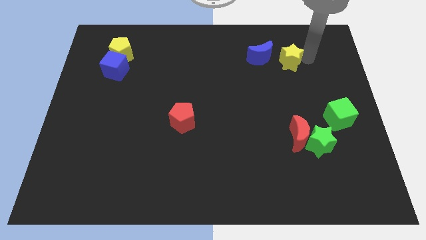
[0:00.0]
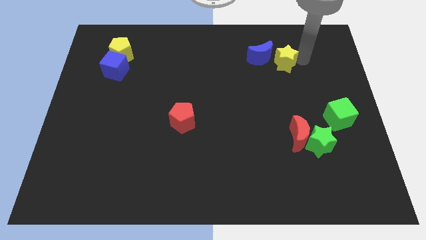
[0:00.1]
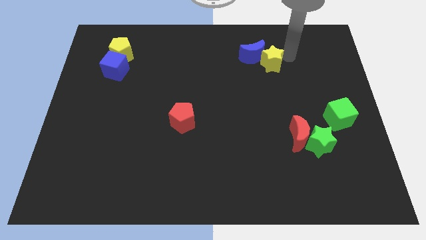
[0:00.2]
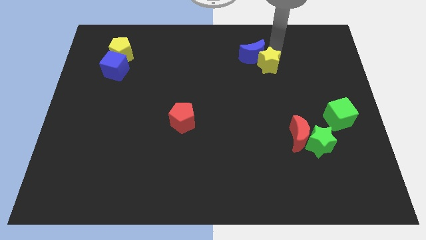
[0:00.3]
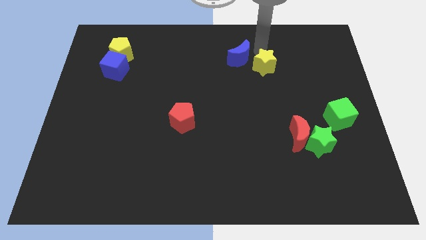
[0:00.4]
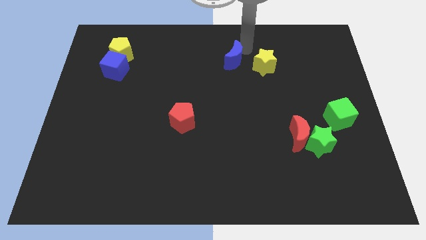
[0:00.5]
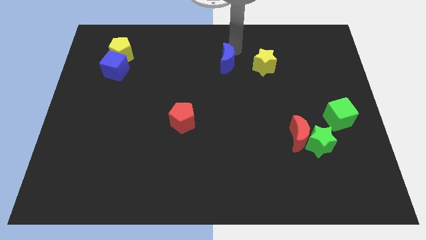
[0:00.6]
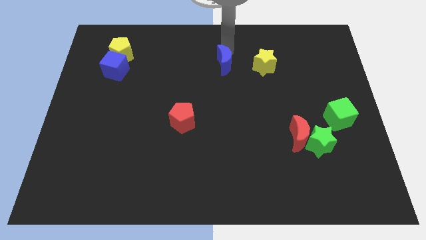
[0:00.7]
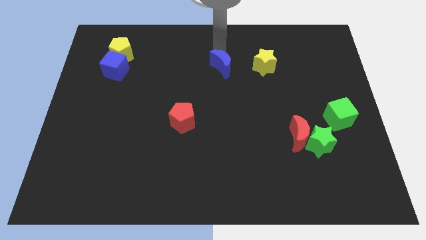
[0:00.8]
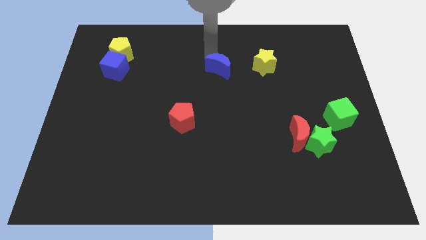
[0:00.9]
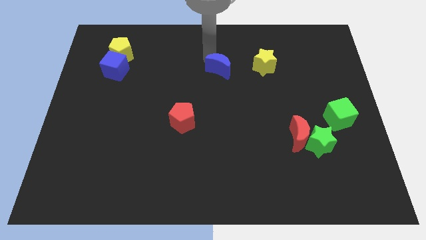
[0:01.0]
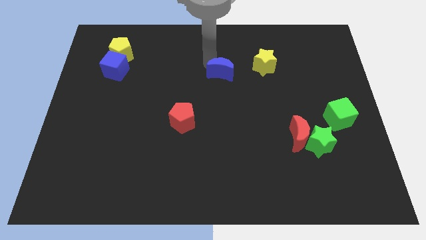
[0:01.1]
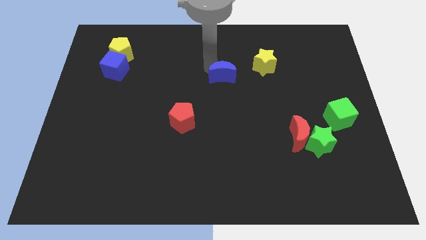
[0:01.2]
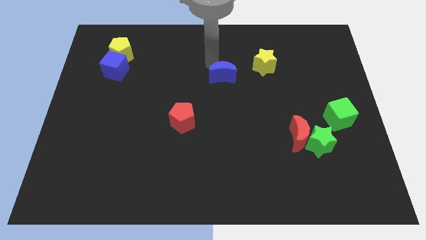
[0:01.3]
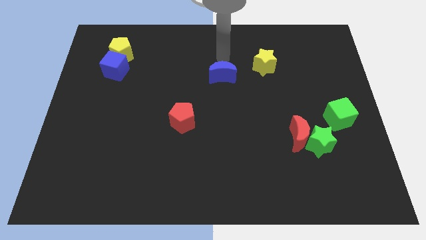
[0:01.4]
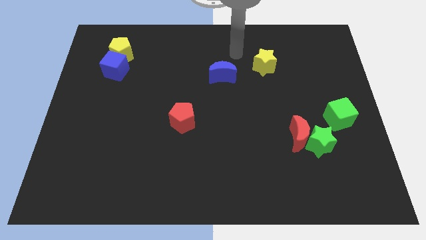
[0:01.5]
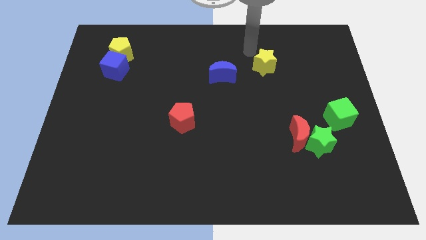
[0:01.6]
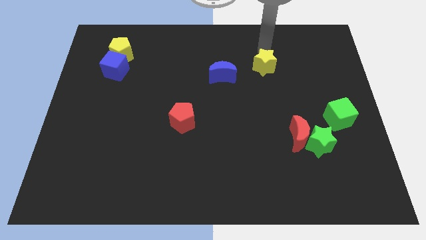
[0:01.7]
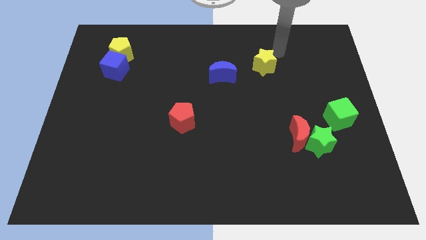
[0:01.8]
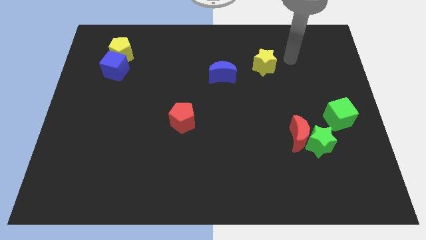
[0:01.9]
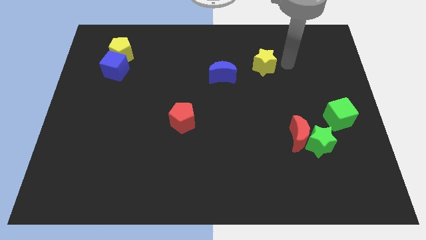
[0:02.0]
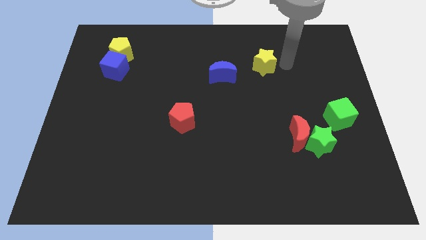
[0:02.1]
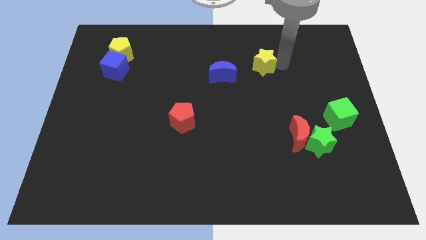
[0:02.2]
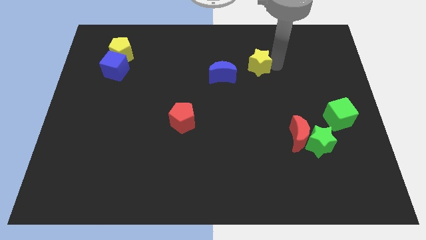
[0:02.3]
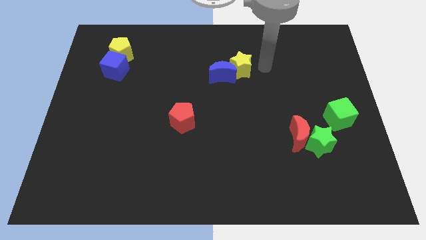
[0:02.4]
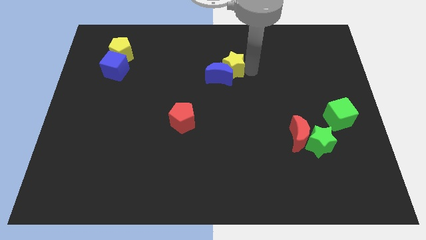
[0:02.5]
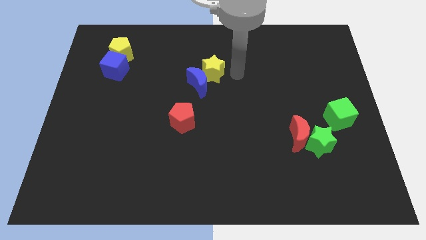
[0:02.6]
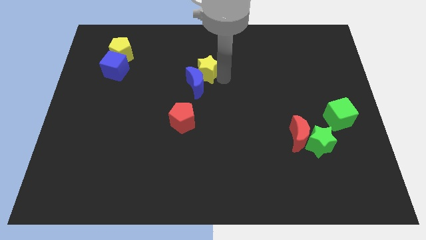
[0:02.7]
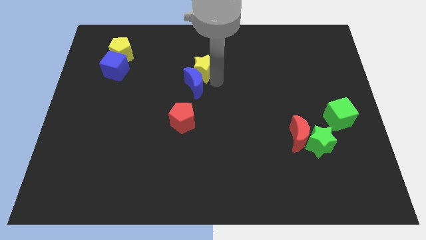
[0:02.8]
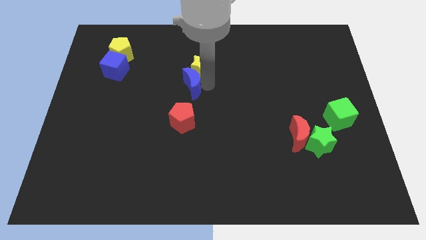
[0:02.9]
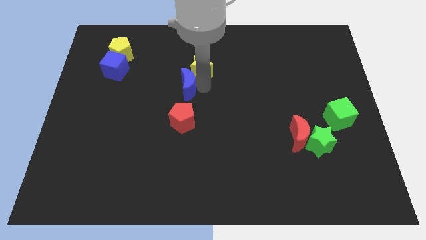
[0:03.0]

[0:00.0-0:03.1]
push the yellow star and the blue moon towards the center of the board

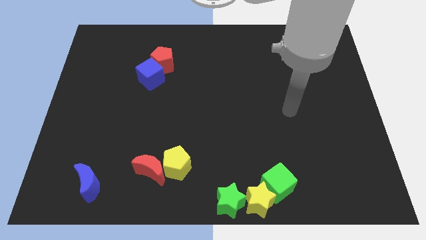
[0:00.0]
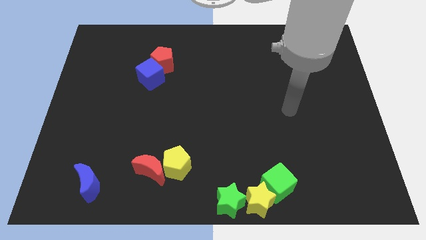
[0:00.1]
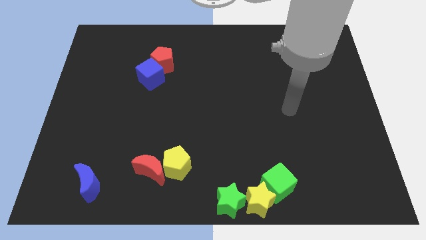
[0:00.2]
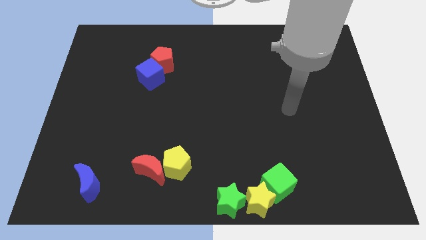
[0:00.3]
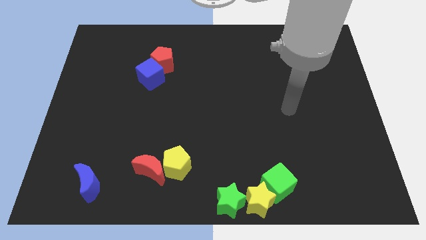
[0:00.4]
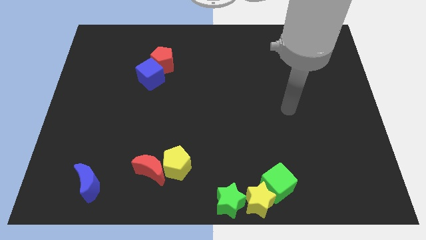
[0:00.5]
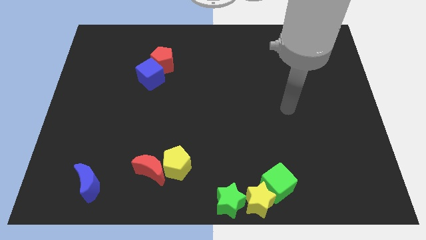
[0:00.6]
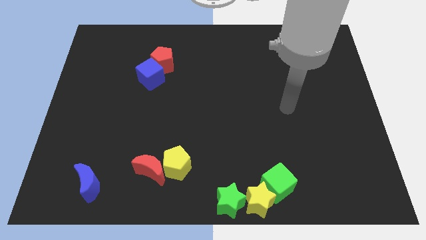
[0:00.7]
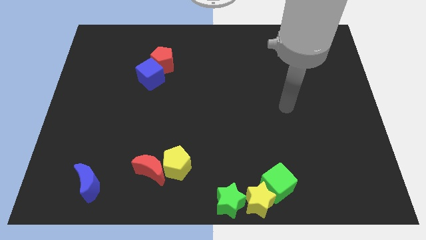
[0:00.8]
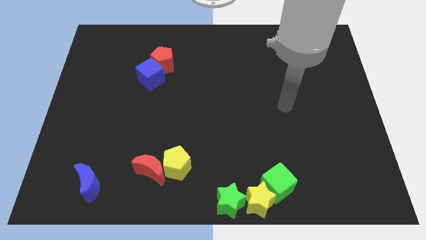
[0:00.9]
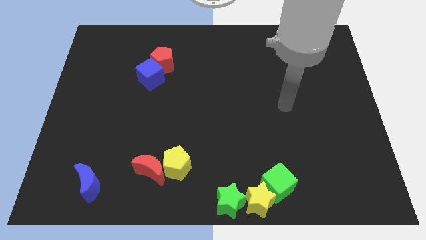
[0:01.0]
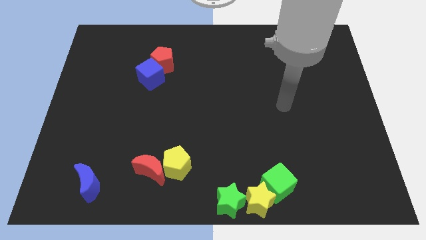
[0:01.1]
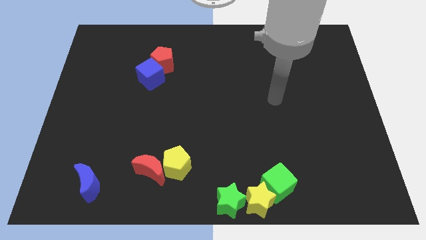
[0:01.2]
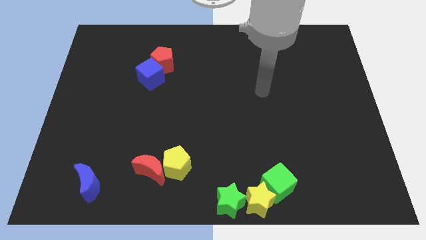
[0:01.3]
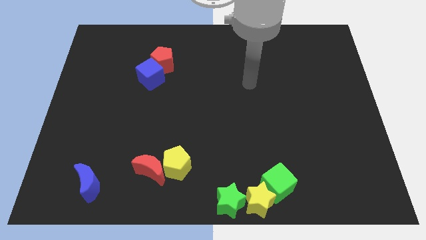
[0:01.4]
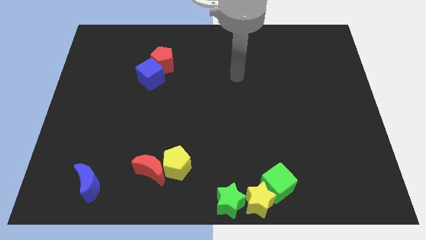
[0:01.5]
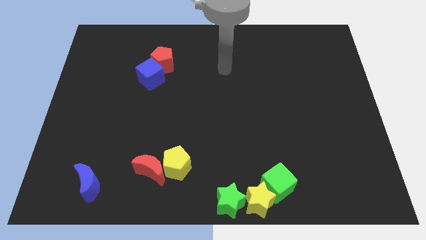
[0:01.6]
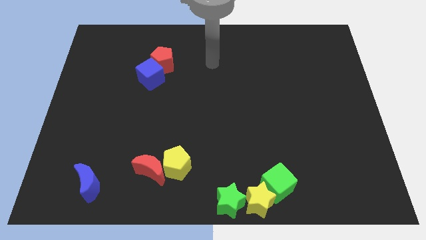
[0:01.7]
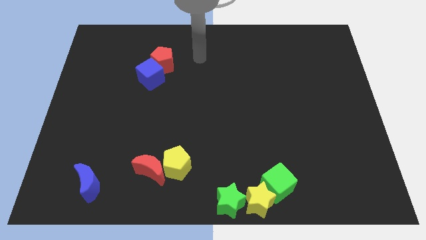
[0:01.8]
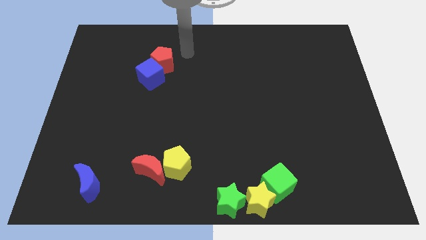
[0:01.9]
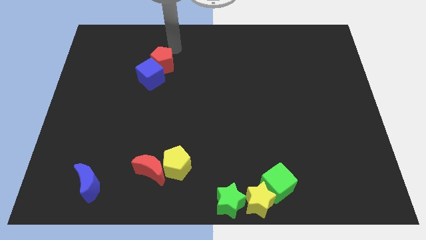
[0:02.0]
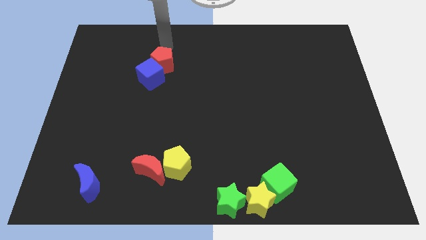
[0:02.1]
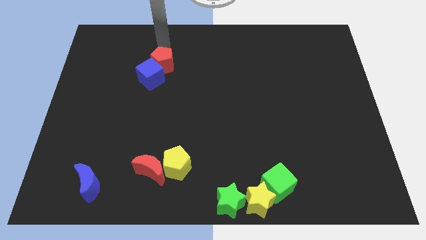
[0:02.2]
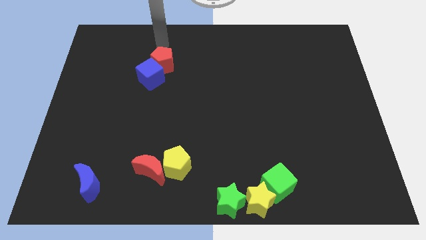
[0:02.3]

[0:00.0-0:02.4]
point the arm at the top of the red pentagon

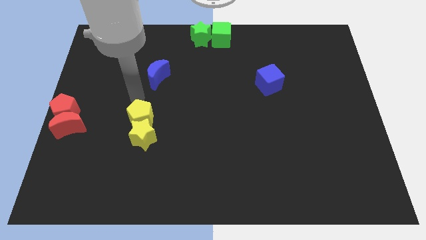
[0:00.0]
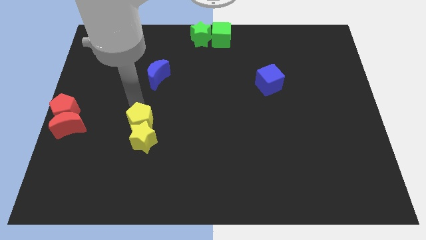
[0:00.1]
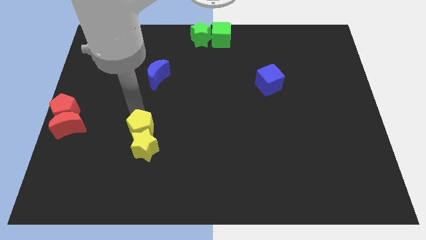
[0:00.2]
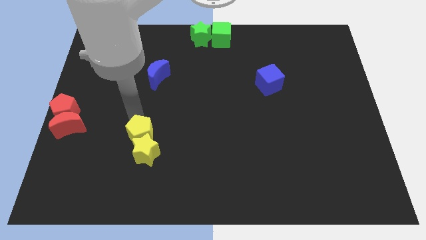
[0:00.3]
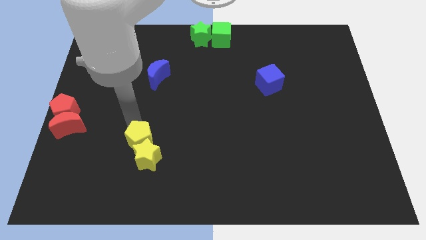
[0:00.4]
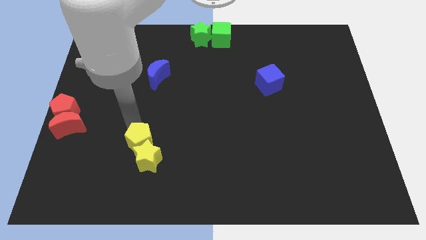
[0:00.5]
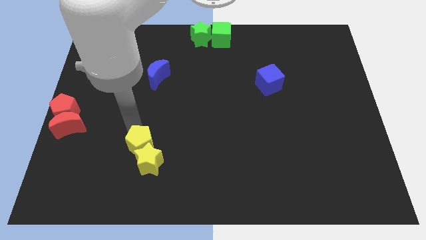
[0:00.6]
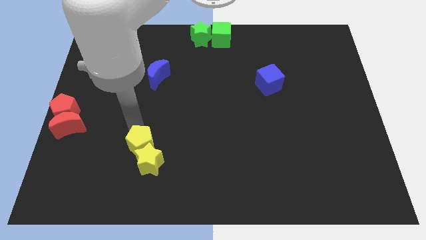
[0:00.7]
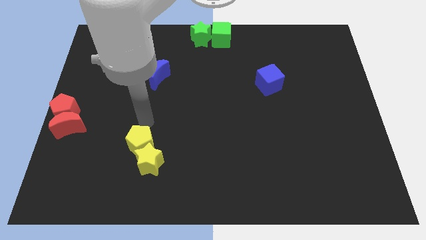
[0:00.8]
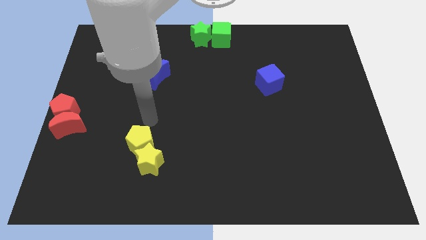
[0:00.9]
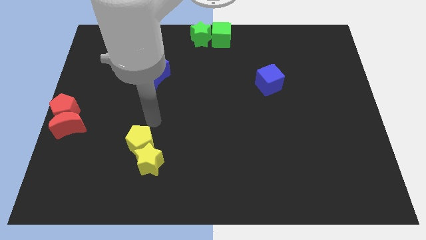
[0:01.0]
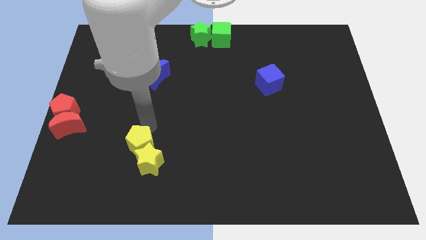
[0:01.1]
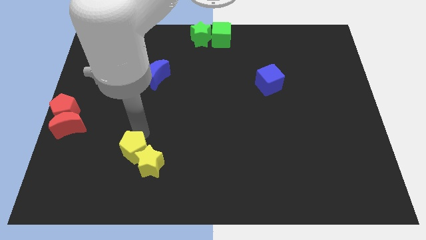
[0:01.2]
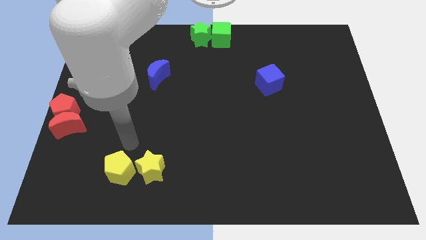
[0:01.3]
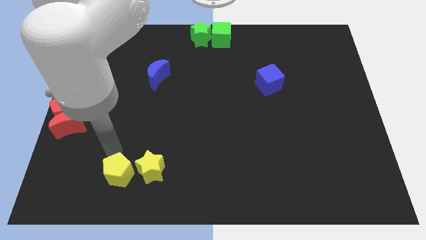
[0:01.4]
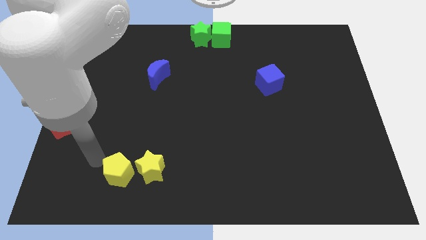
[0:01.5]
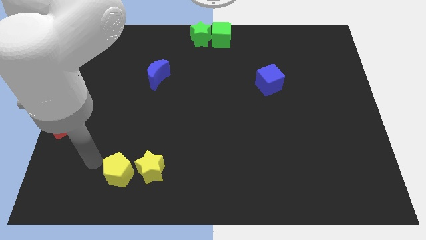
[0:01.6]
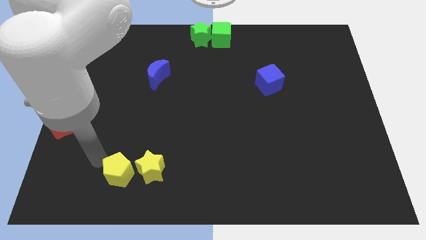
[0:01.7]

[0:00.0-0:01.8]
drag the yellow pentagon to the left side of the yellow star

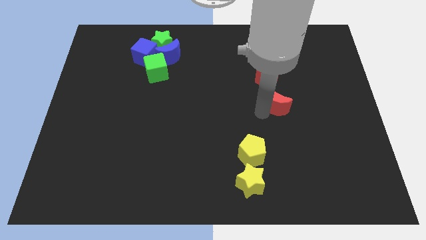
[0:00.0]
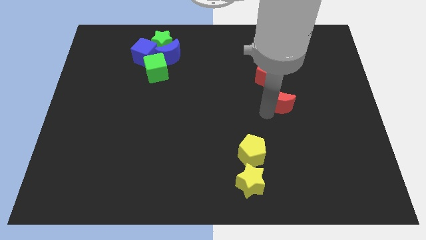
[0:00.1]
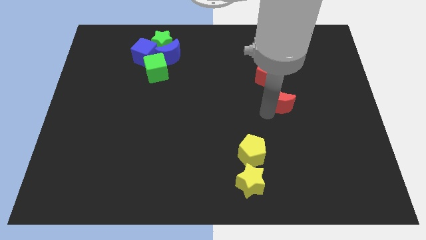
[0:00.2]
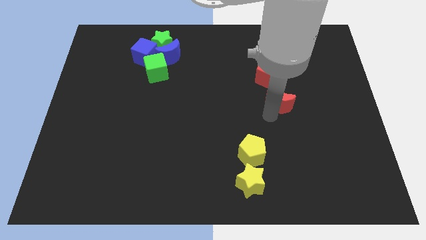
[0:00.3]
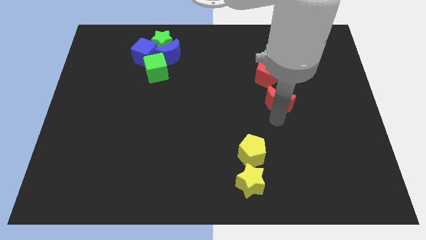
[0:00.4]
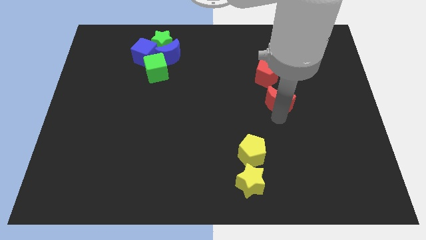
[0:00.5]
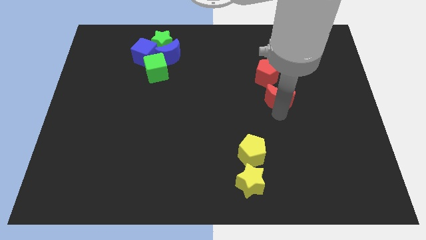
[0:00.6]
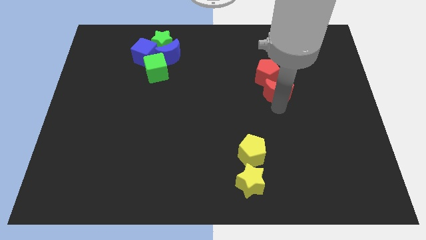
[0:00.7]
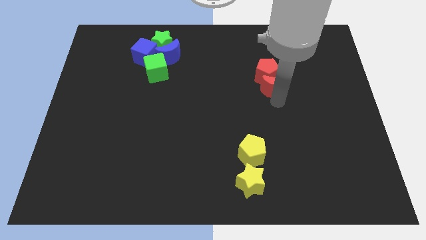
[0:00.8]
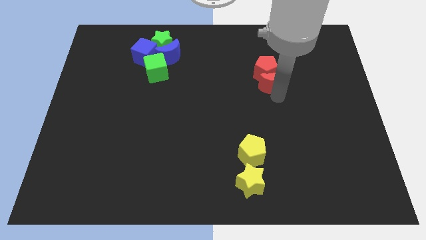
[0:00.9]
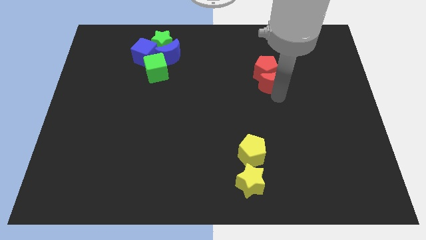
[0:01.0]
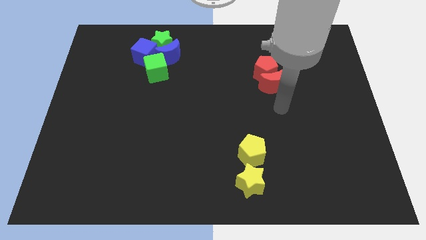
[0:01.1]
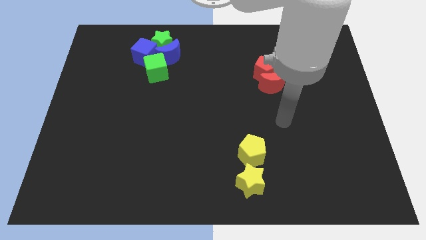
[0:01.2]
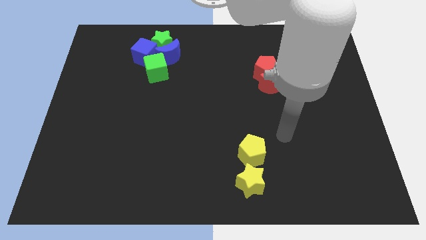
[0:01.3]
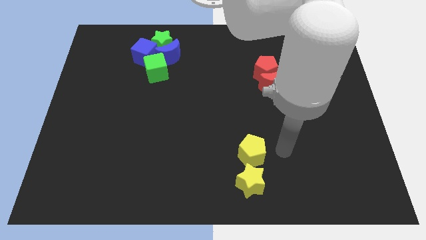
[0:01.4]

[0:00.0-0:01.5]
push the red moon into the red pentagon
